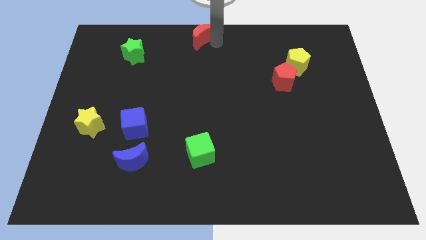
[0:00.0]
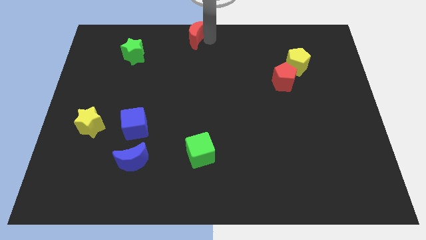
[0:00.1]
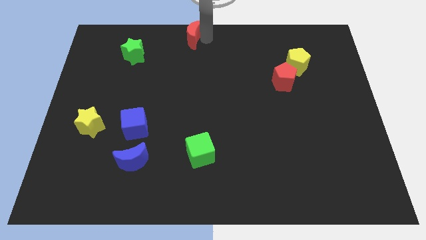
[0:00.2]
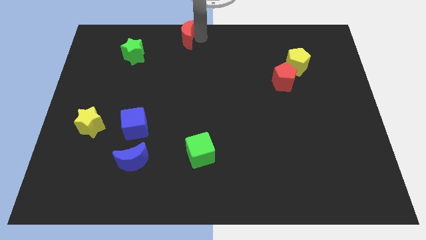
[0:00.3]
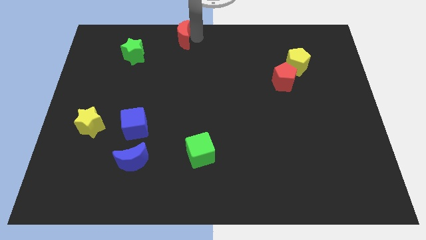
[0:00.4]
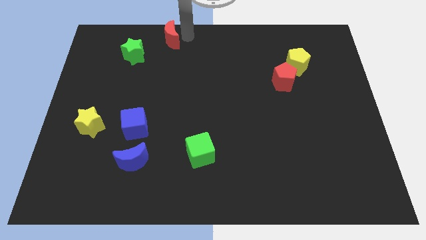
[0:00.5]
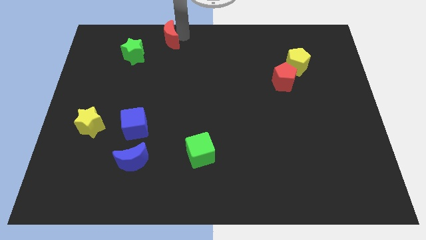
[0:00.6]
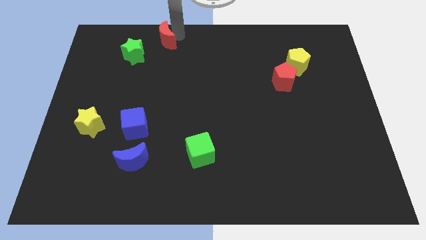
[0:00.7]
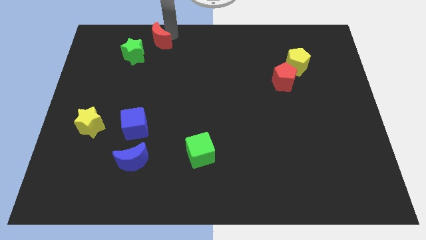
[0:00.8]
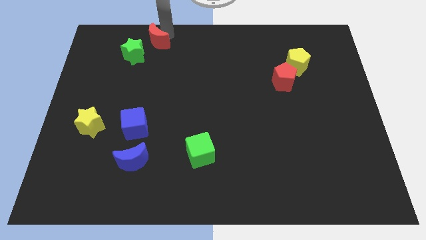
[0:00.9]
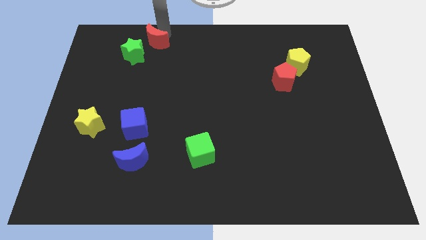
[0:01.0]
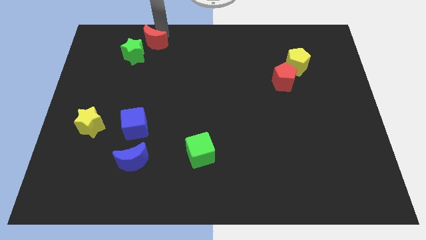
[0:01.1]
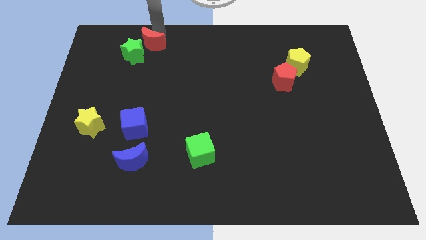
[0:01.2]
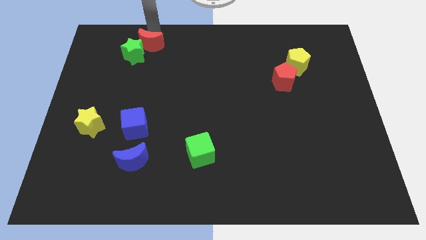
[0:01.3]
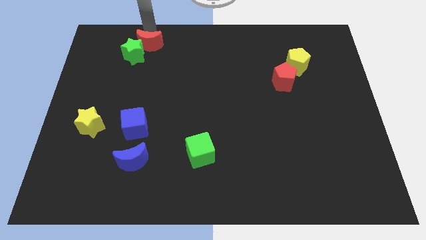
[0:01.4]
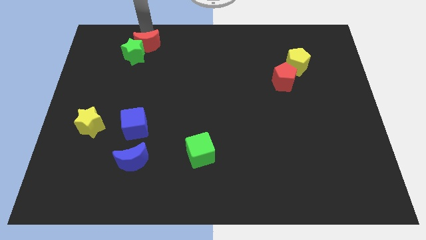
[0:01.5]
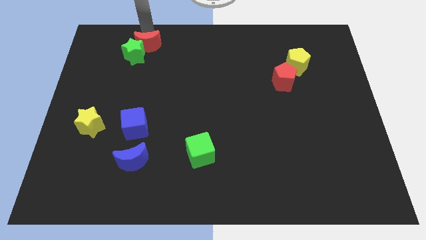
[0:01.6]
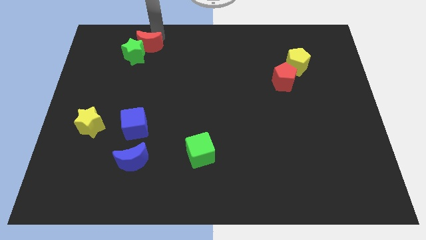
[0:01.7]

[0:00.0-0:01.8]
move the red crescent to the right side of the green star

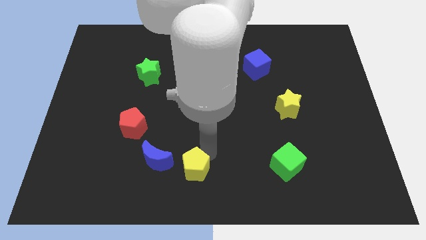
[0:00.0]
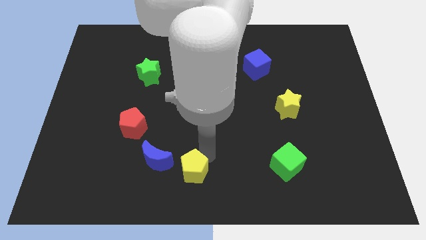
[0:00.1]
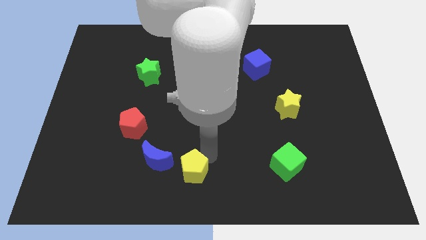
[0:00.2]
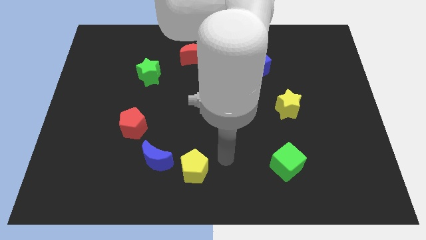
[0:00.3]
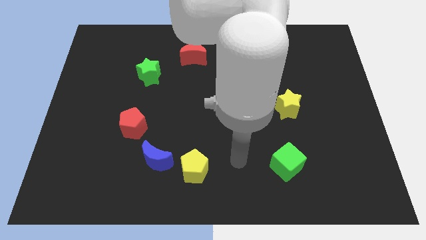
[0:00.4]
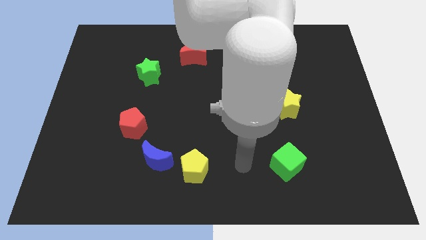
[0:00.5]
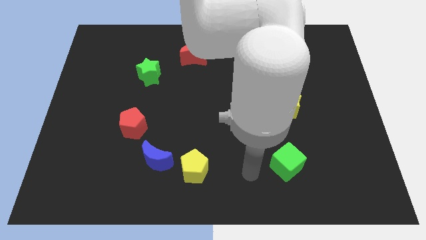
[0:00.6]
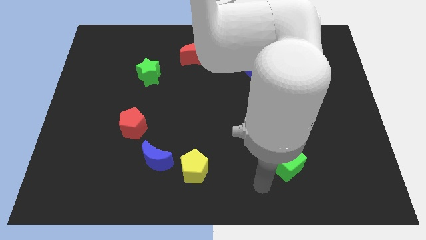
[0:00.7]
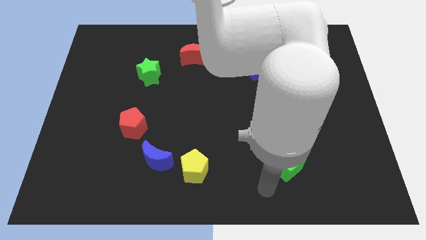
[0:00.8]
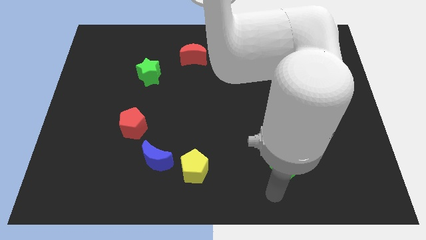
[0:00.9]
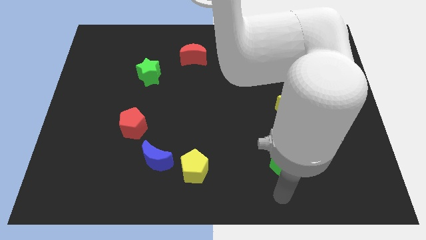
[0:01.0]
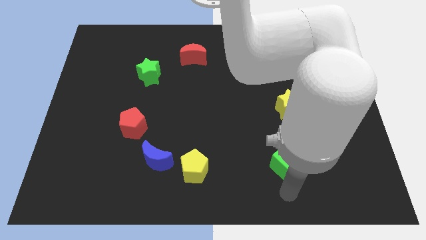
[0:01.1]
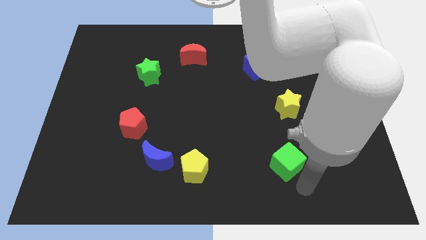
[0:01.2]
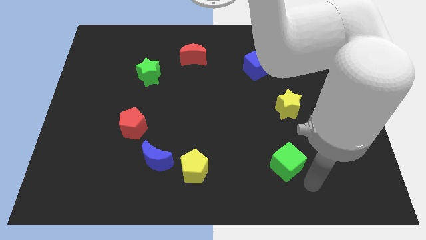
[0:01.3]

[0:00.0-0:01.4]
move yourself close to the green cube

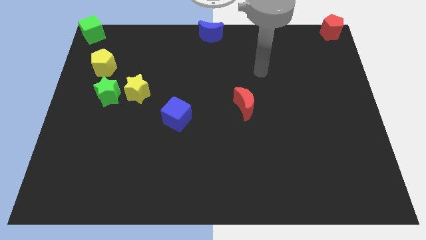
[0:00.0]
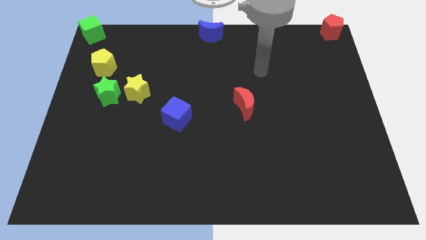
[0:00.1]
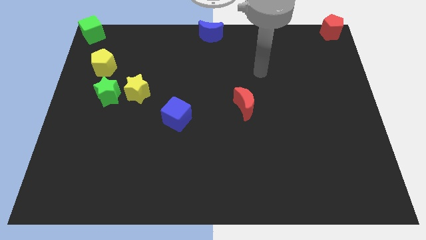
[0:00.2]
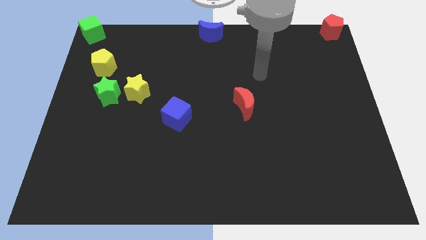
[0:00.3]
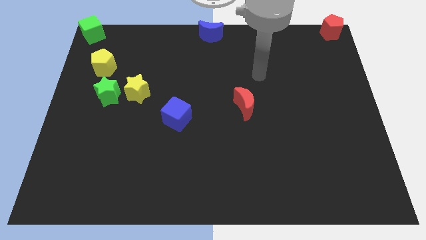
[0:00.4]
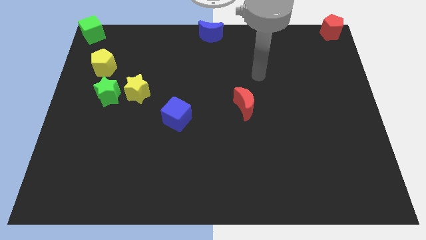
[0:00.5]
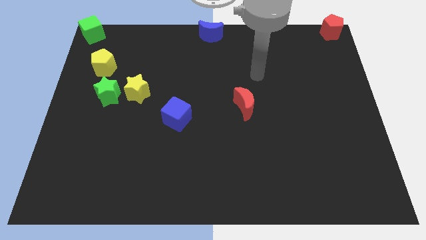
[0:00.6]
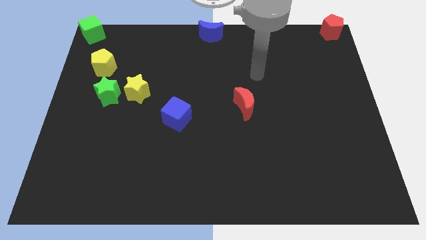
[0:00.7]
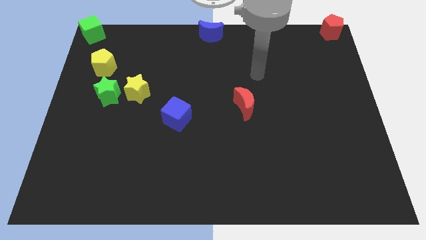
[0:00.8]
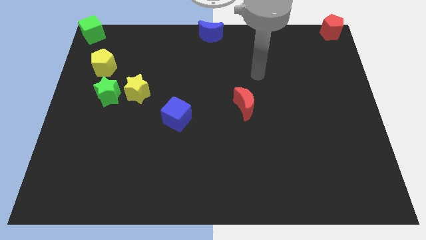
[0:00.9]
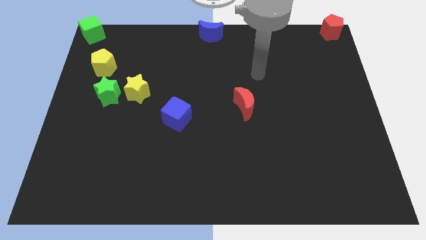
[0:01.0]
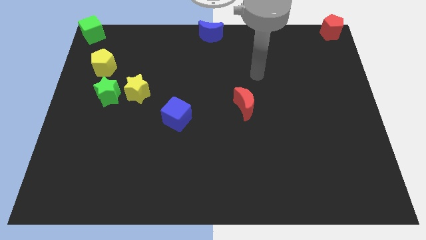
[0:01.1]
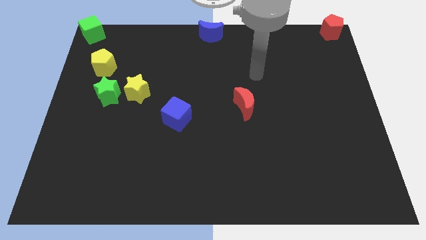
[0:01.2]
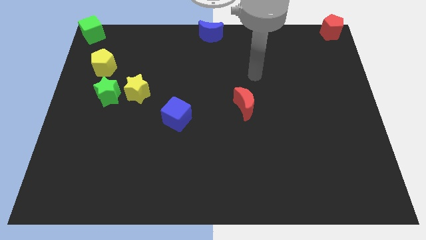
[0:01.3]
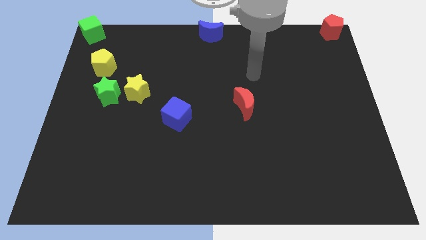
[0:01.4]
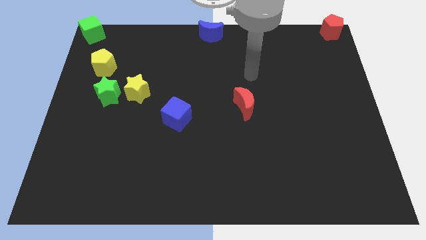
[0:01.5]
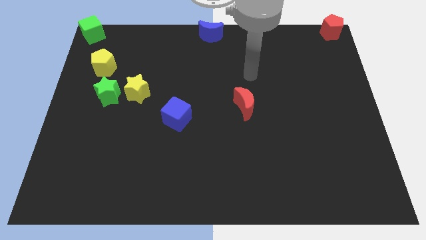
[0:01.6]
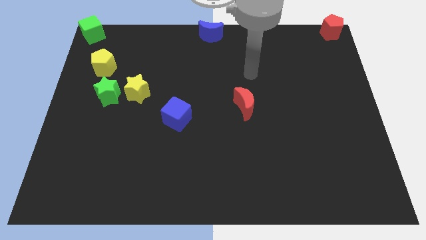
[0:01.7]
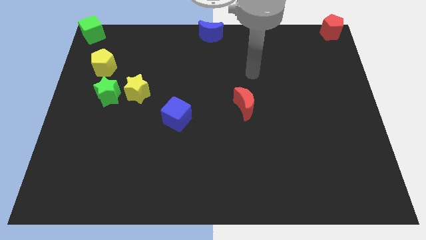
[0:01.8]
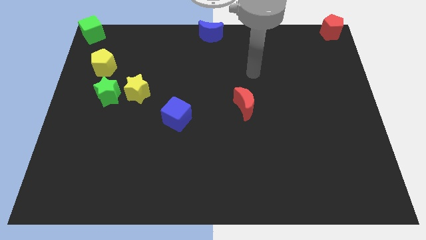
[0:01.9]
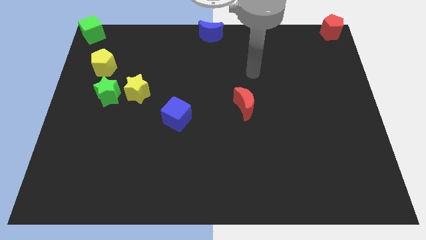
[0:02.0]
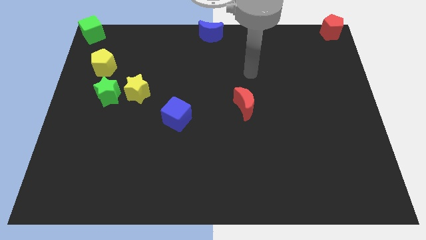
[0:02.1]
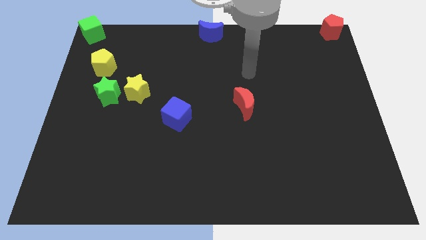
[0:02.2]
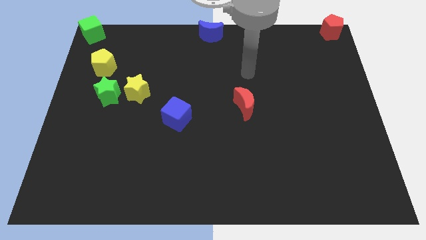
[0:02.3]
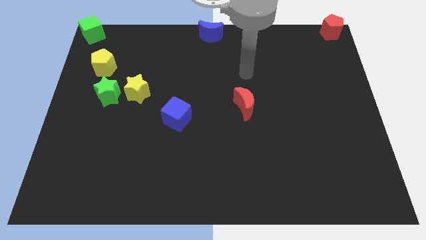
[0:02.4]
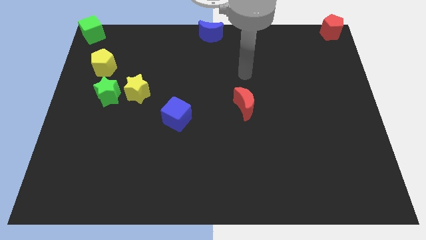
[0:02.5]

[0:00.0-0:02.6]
point your arm at the top of the red moon

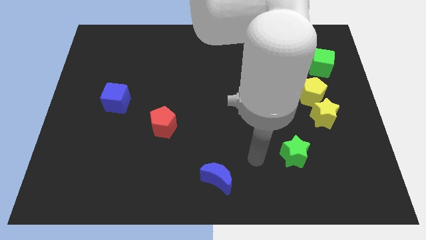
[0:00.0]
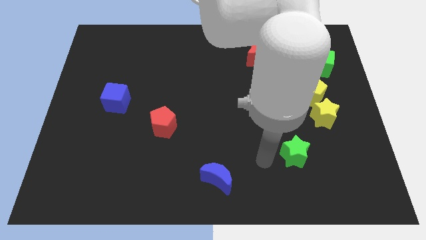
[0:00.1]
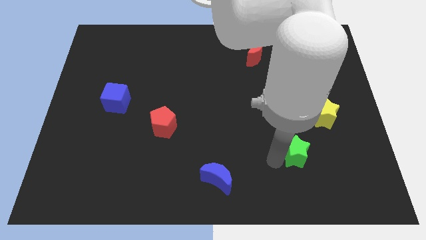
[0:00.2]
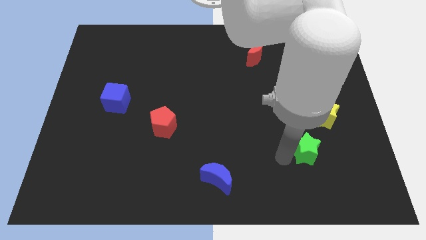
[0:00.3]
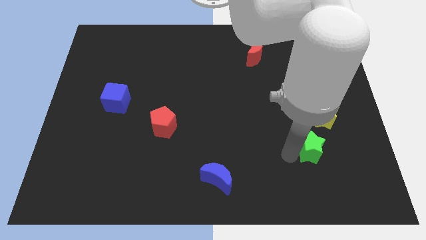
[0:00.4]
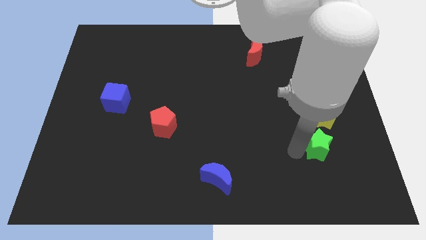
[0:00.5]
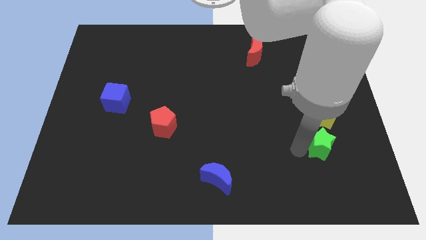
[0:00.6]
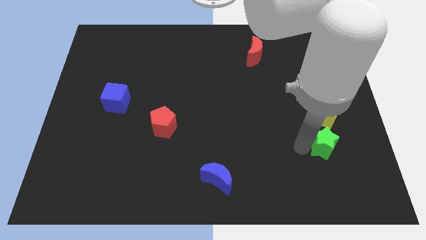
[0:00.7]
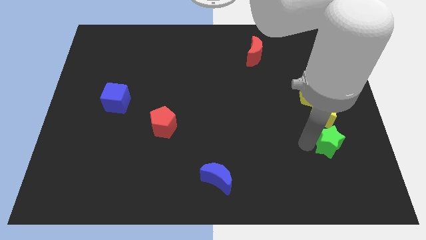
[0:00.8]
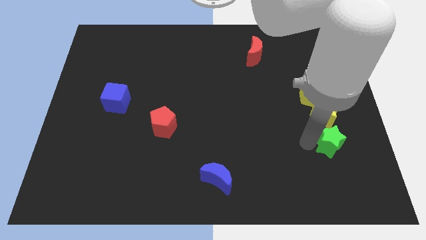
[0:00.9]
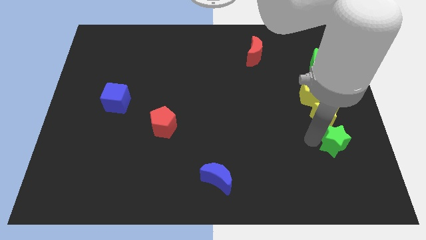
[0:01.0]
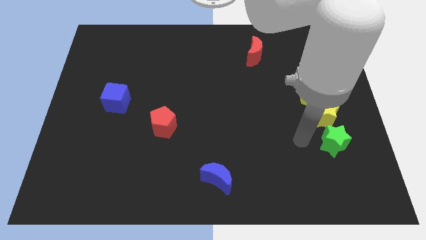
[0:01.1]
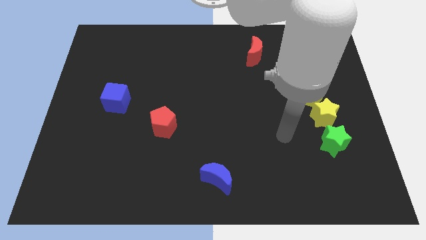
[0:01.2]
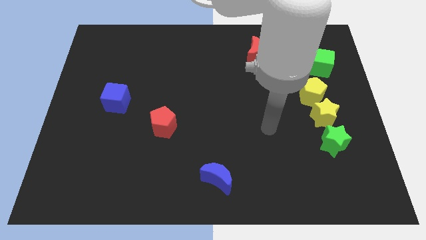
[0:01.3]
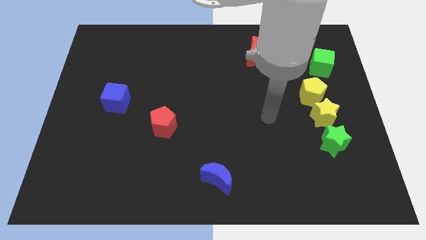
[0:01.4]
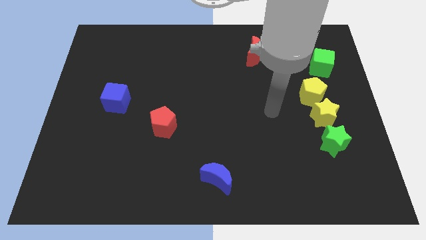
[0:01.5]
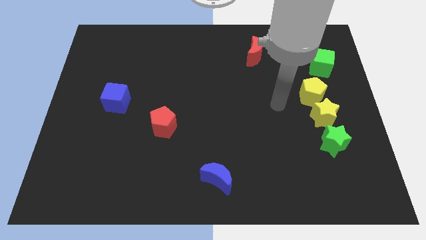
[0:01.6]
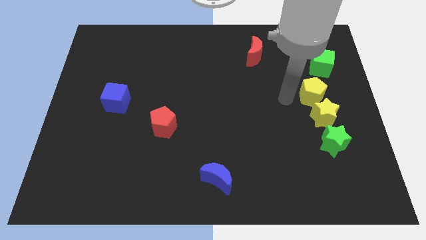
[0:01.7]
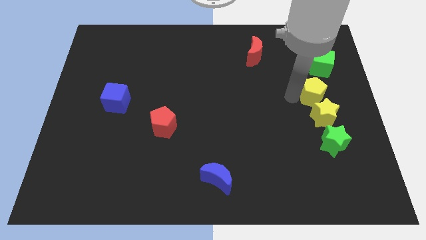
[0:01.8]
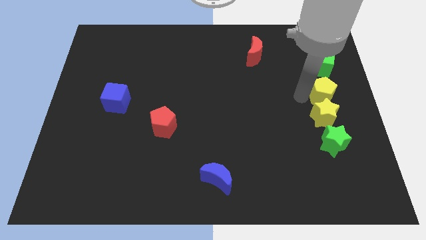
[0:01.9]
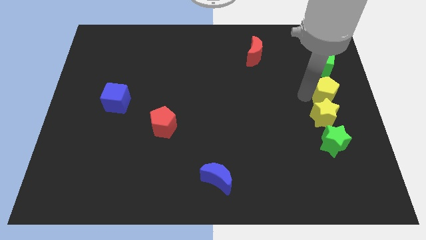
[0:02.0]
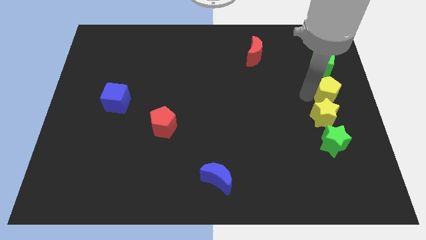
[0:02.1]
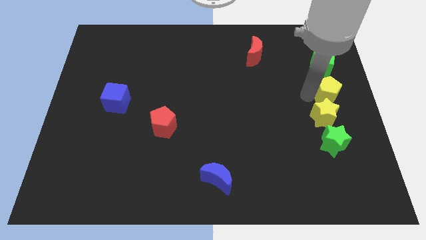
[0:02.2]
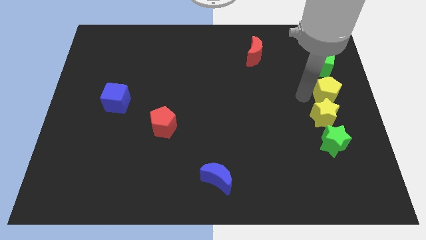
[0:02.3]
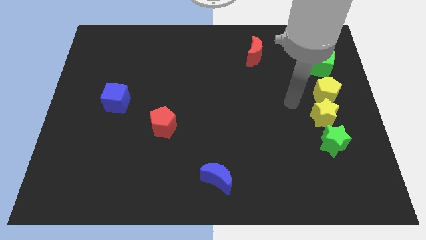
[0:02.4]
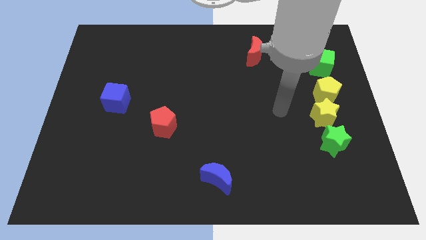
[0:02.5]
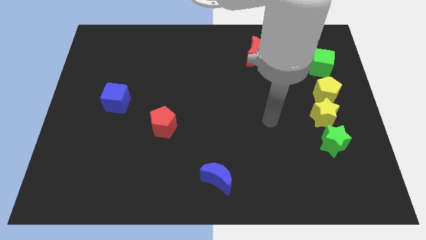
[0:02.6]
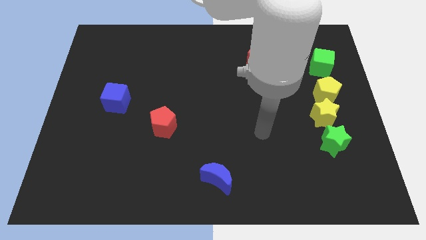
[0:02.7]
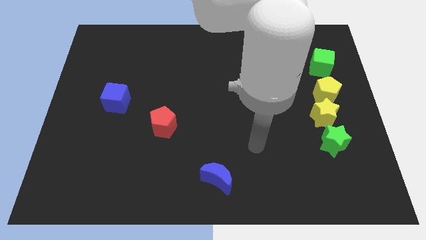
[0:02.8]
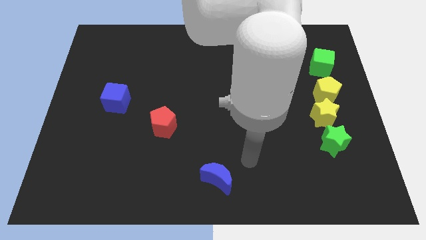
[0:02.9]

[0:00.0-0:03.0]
adjust the green star and yellow pentagon into the vertical line of blocks

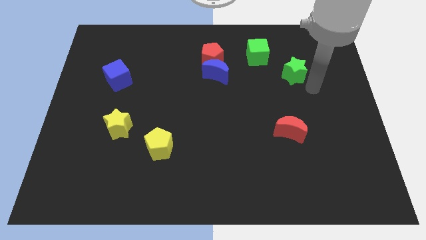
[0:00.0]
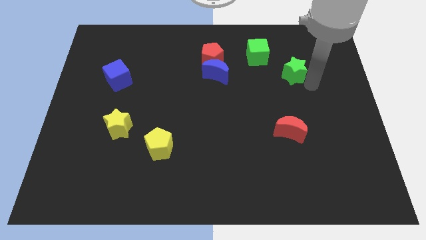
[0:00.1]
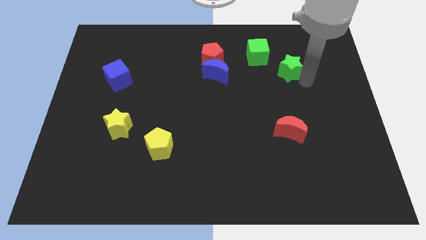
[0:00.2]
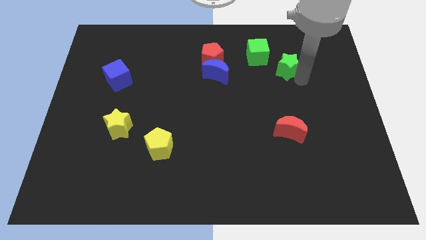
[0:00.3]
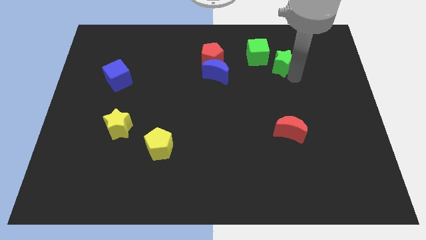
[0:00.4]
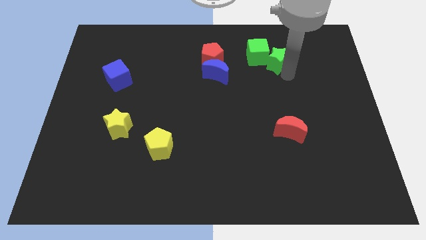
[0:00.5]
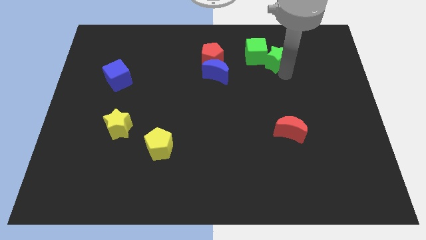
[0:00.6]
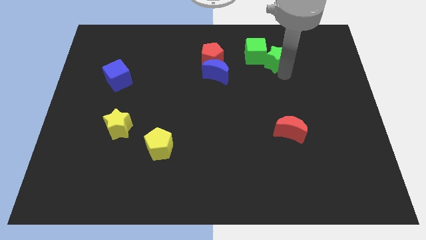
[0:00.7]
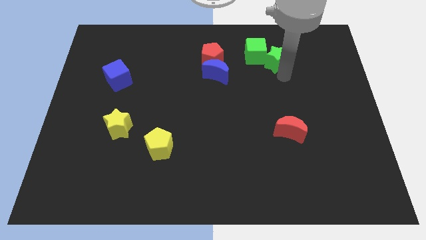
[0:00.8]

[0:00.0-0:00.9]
push green star into the green cube
